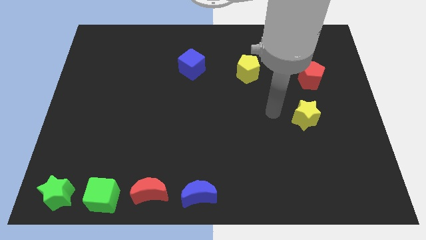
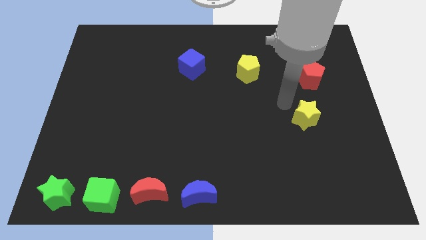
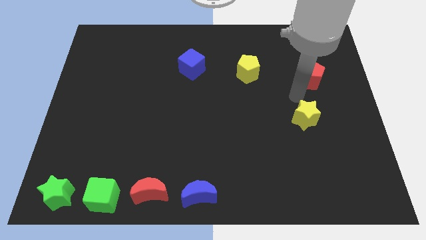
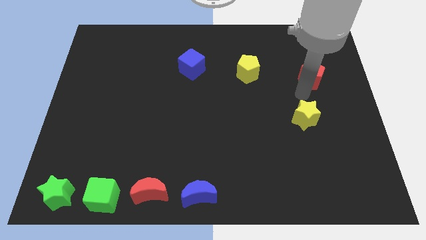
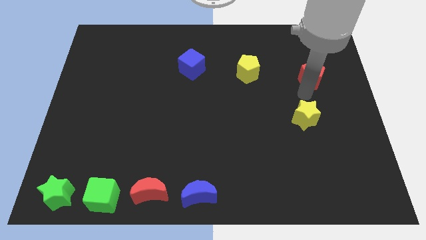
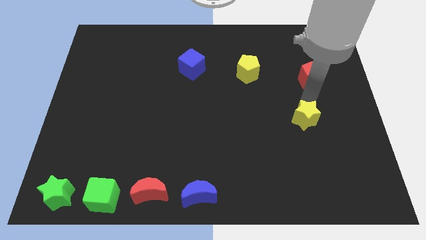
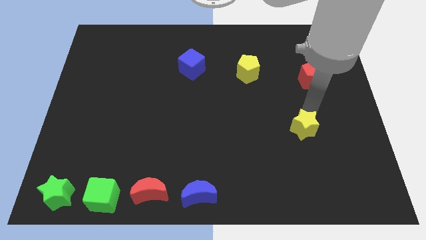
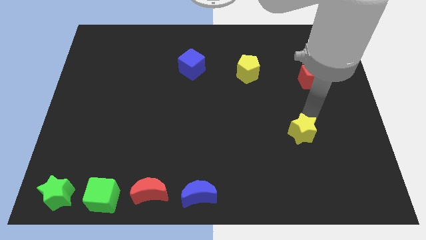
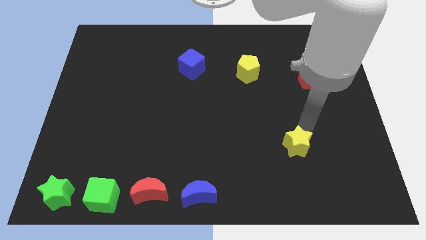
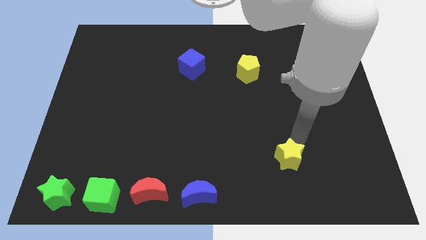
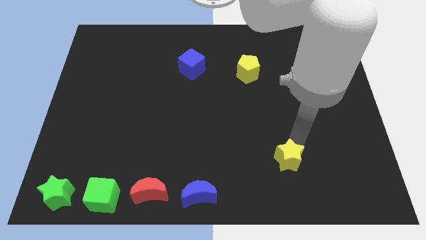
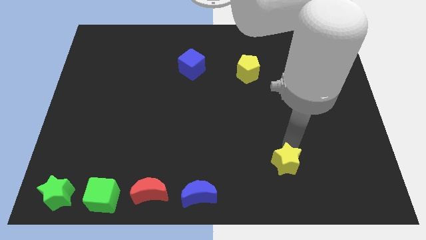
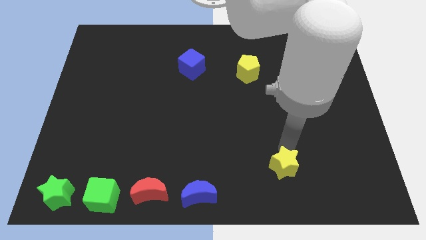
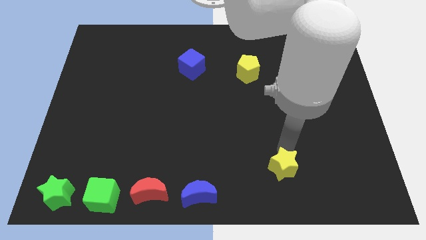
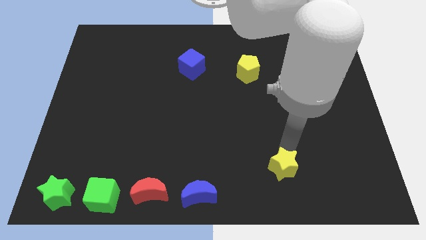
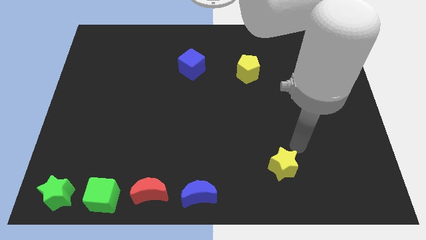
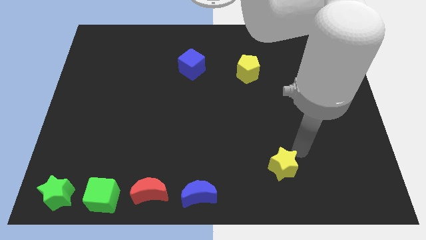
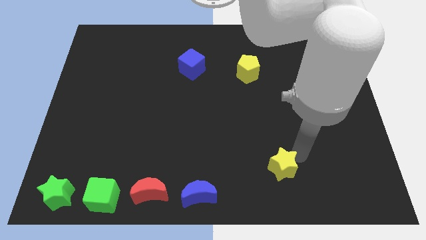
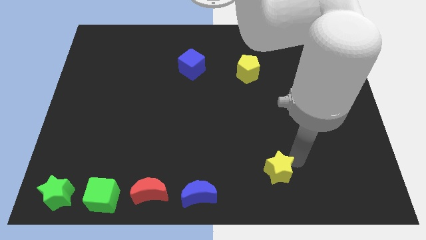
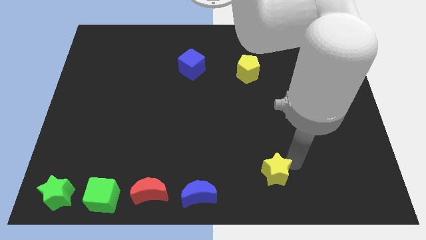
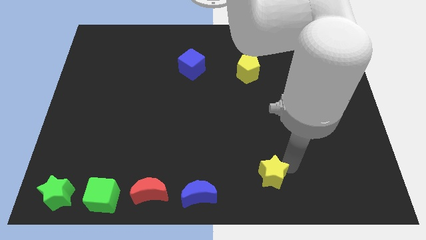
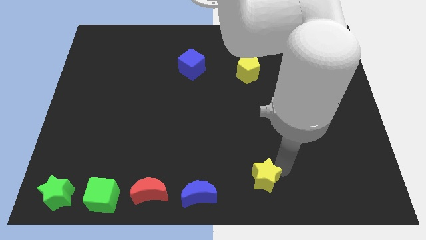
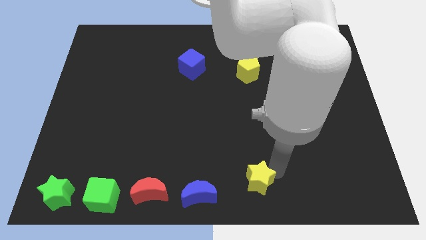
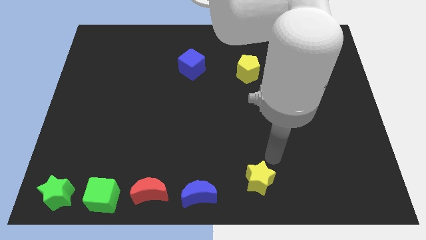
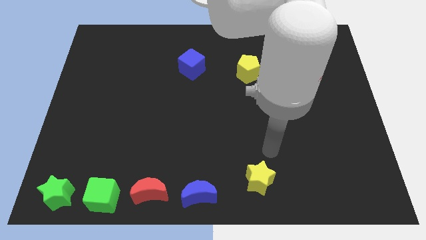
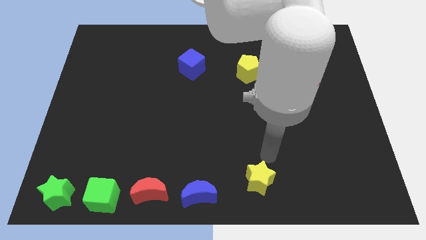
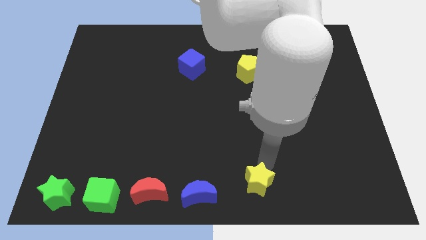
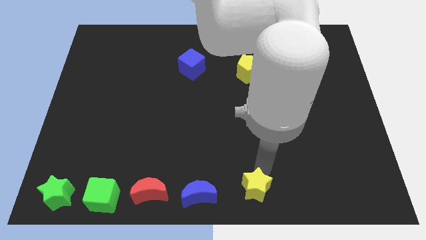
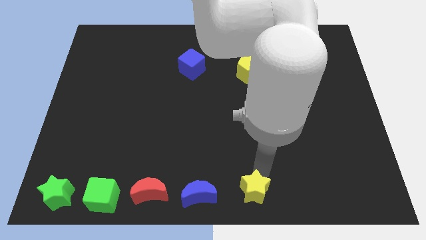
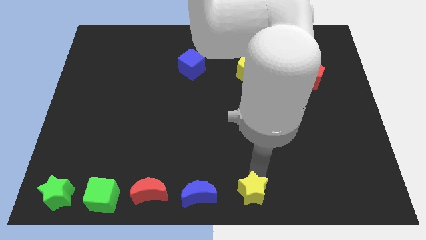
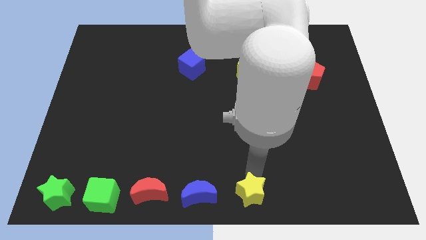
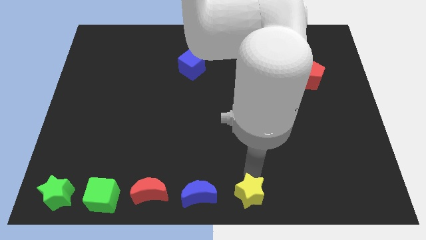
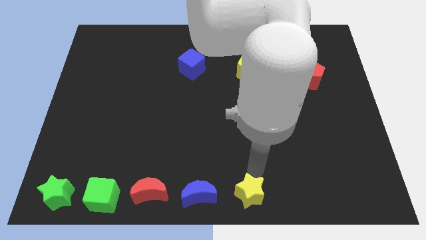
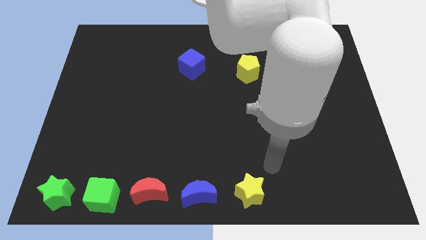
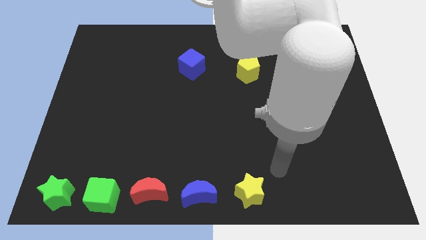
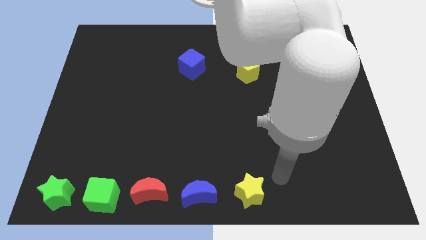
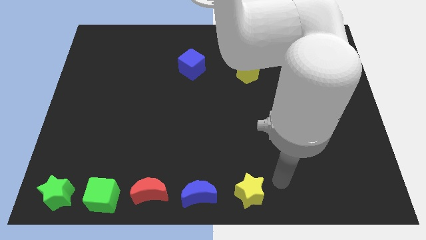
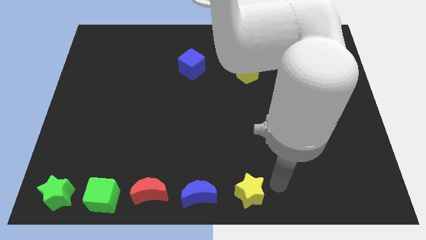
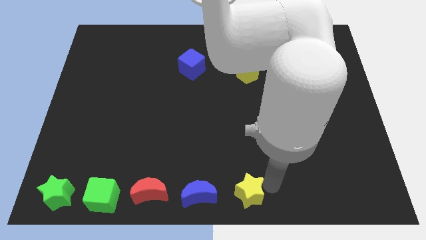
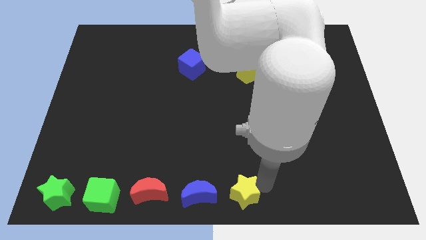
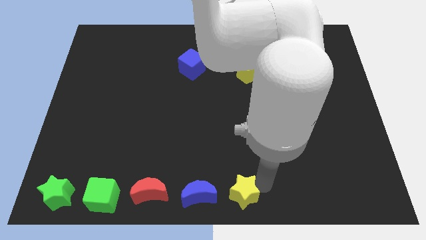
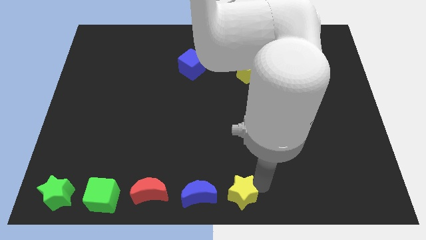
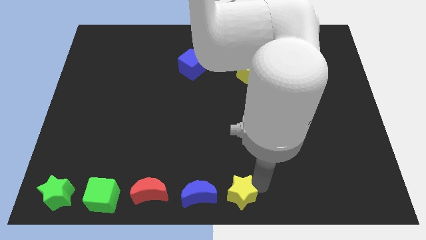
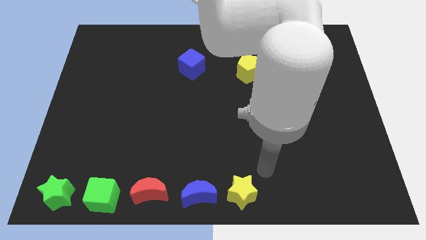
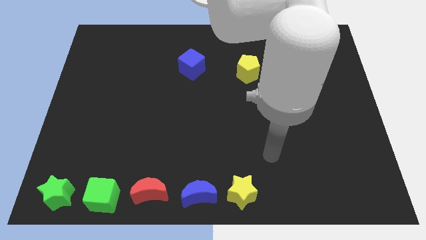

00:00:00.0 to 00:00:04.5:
move the yellow star to the right of the blue moon

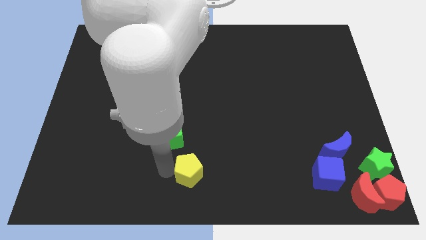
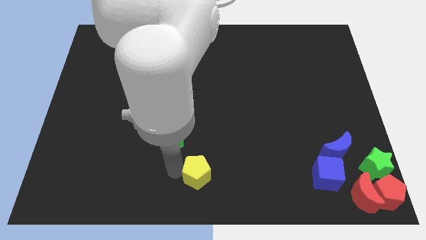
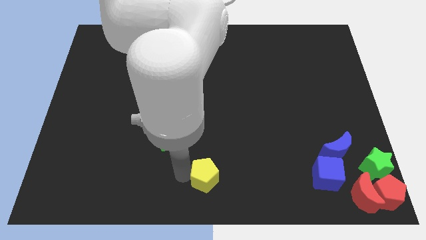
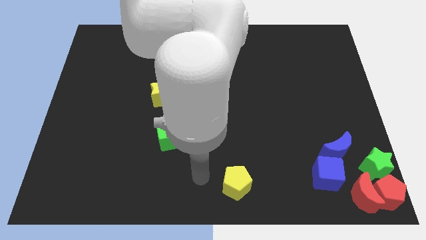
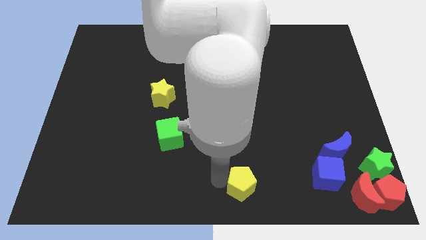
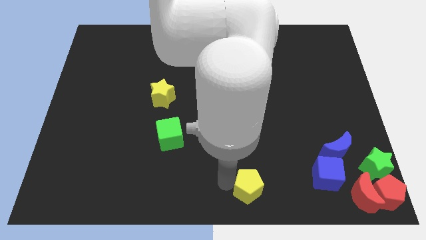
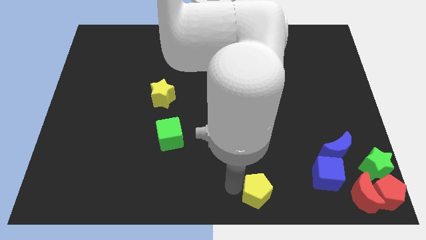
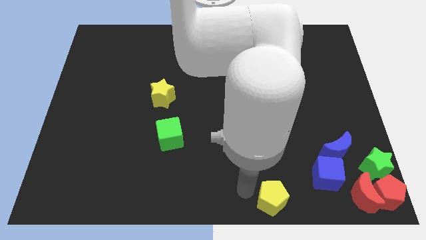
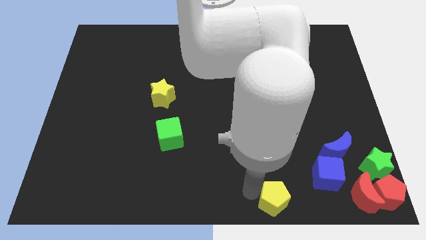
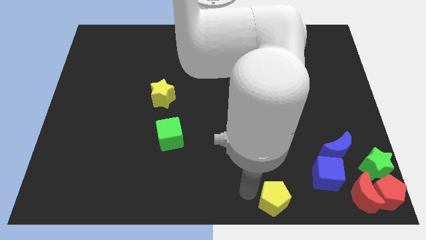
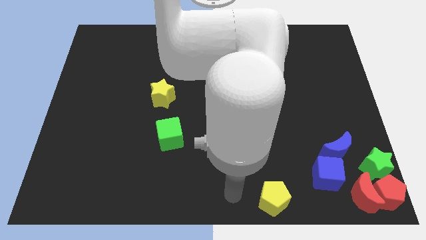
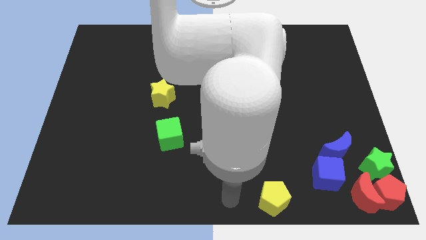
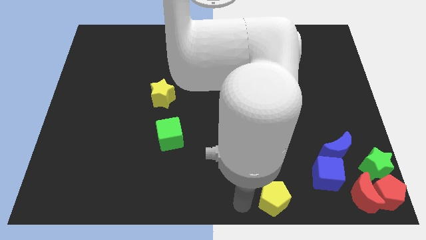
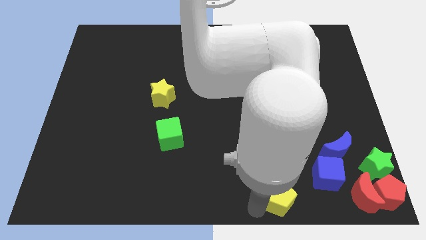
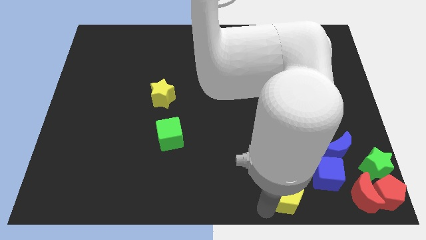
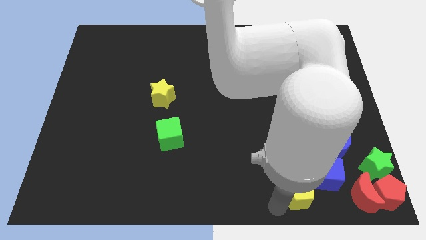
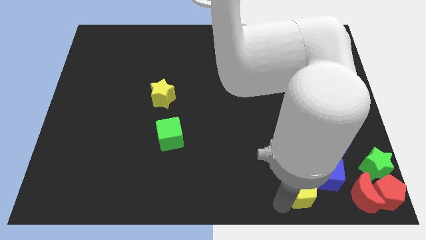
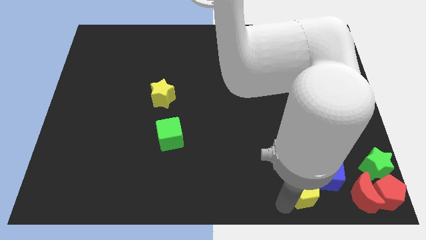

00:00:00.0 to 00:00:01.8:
push yellow pentagon into the group of blocks

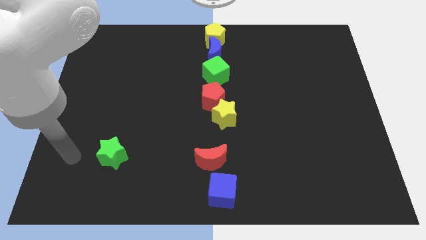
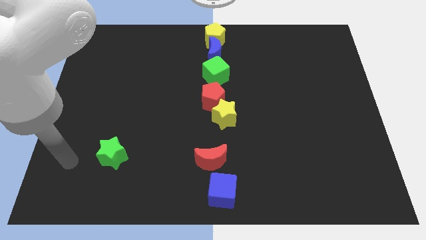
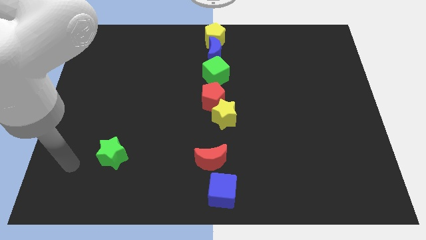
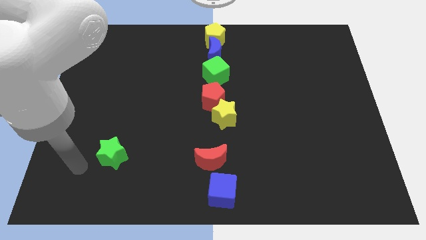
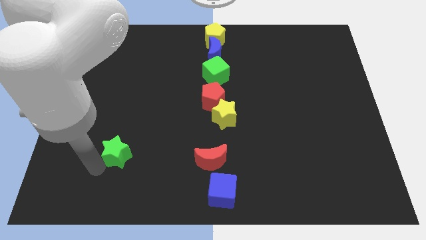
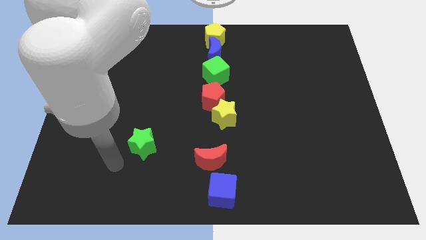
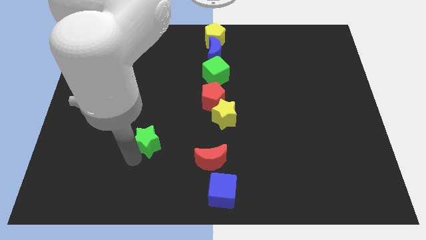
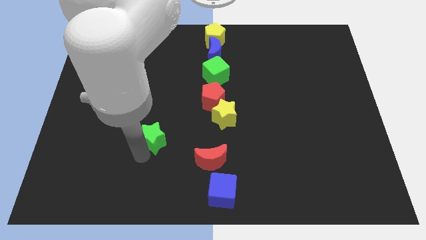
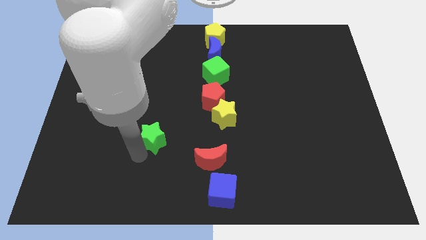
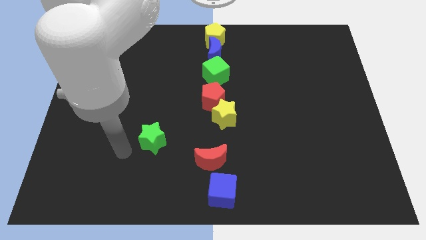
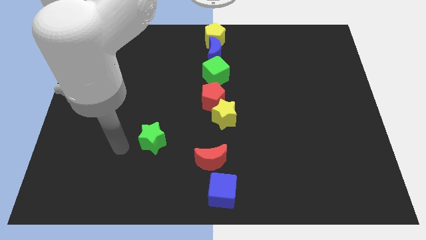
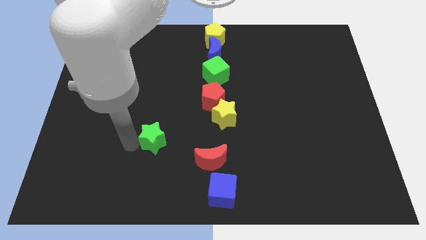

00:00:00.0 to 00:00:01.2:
place the green star diagonally bottom left to the red pentagon

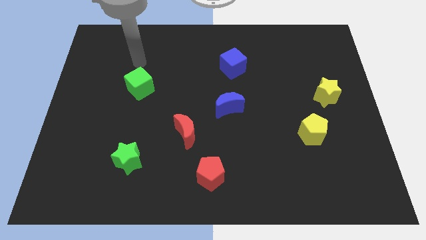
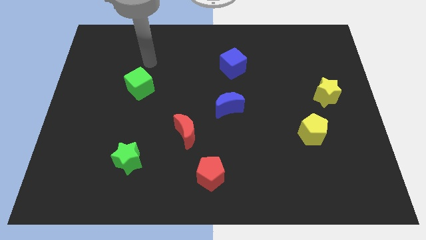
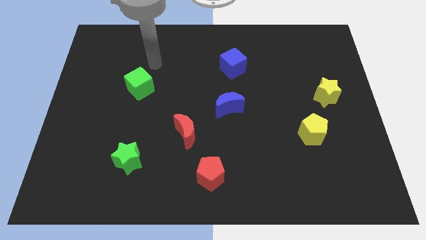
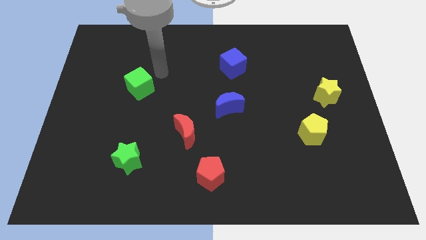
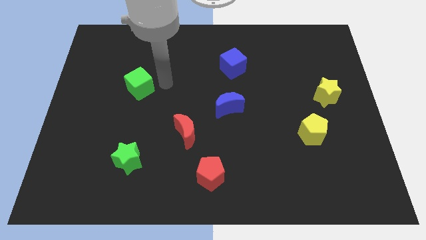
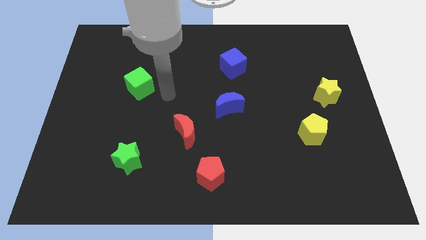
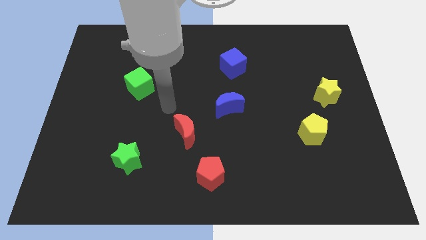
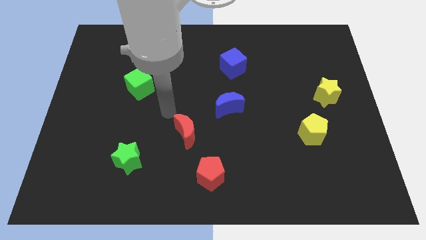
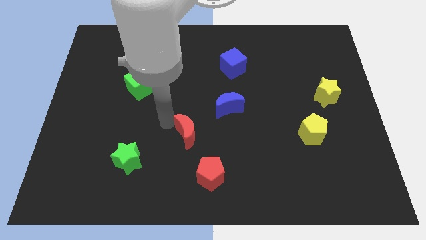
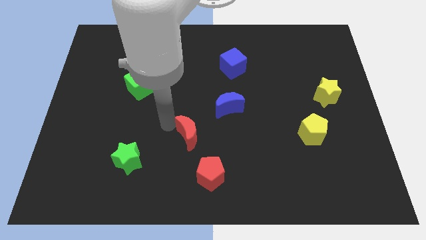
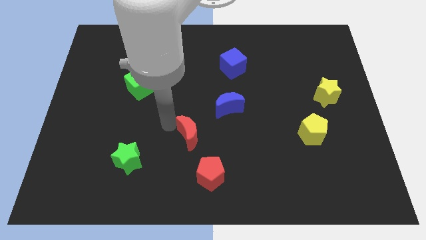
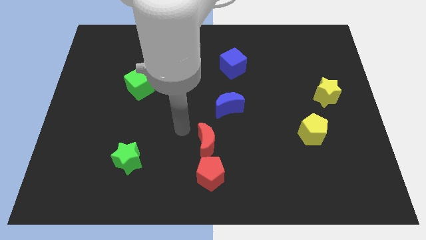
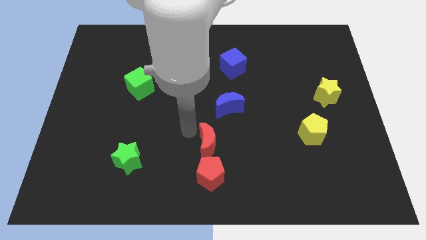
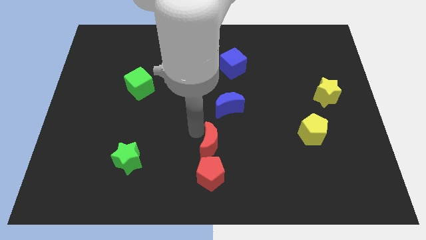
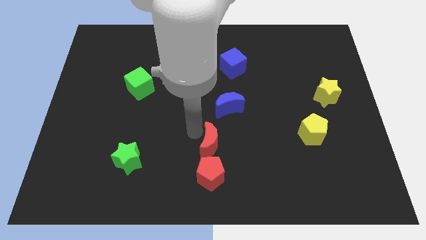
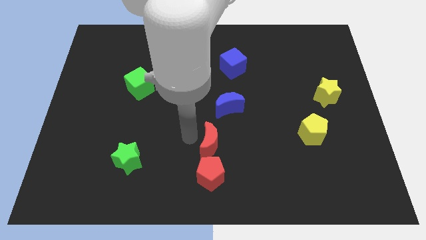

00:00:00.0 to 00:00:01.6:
push the red crescent to the top of the red pentagon
